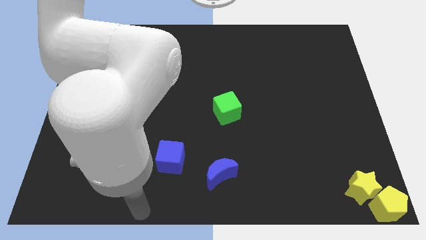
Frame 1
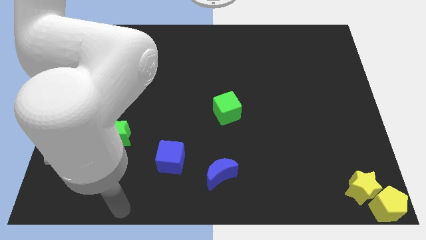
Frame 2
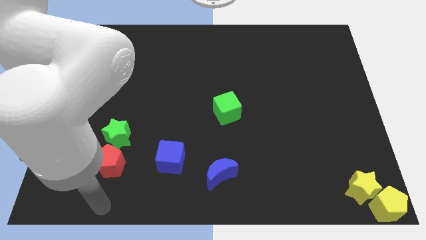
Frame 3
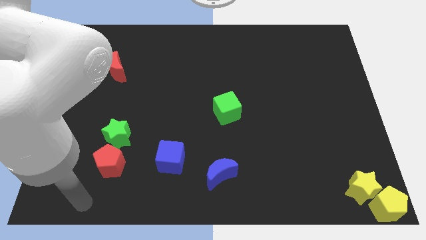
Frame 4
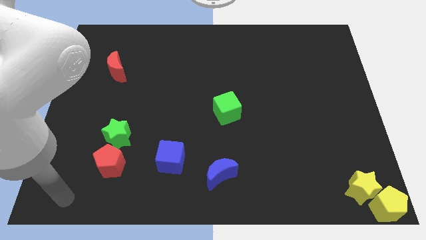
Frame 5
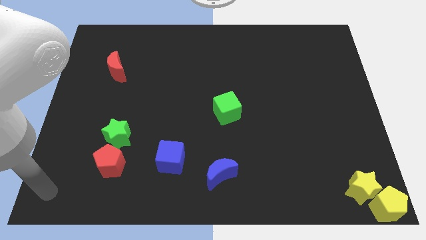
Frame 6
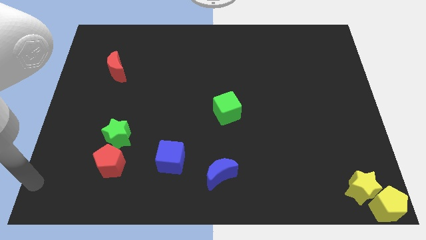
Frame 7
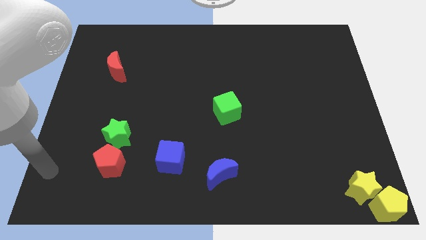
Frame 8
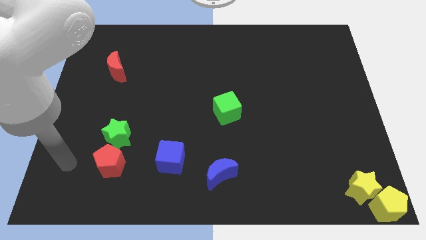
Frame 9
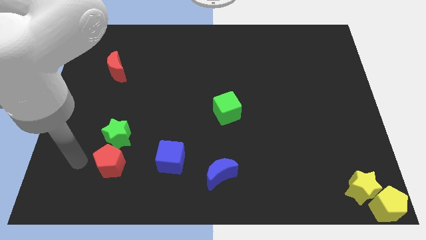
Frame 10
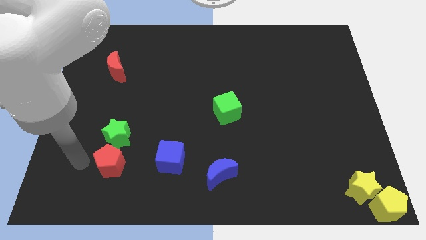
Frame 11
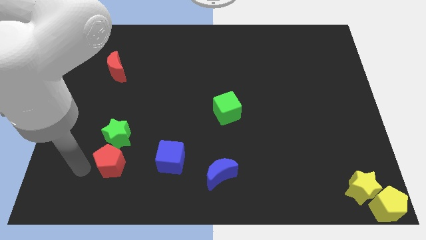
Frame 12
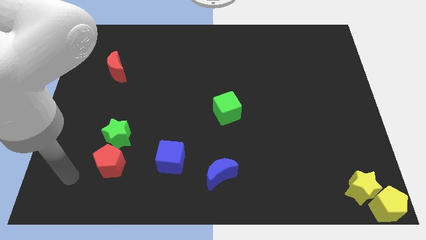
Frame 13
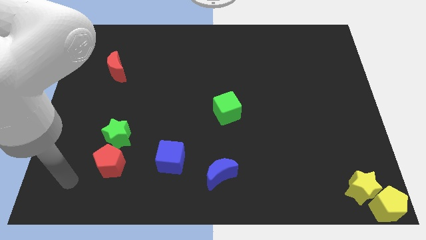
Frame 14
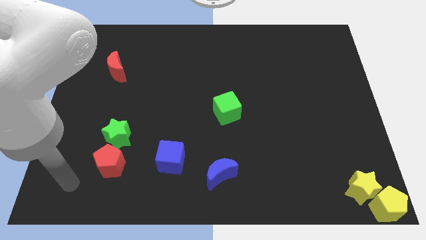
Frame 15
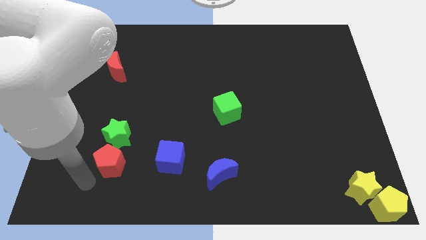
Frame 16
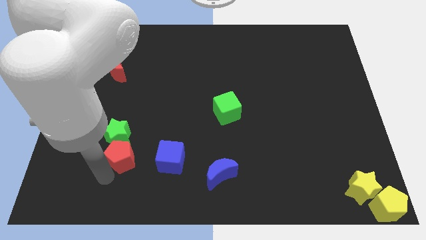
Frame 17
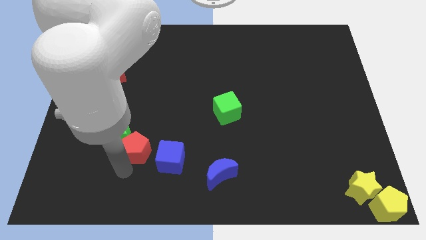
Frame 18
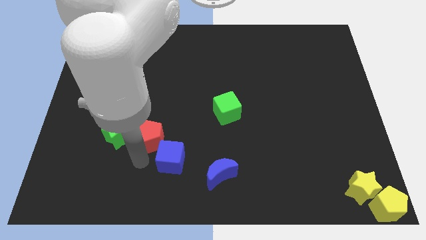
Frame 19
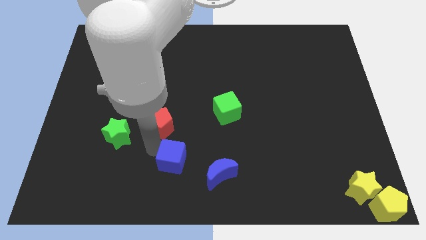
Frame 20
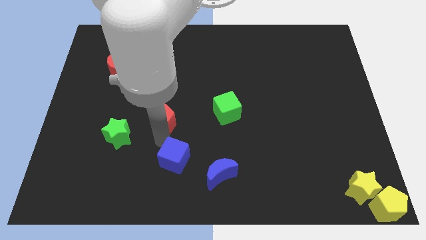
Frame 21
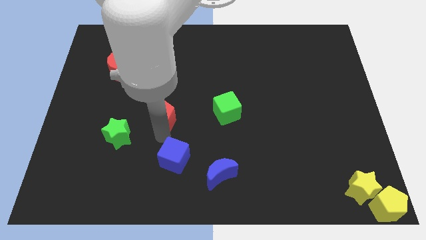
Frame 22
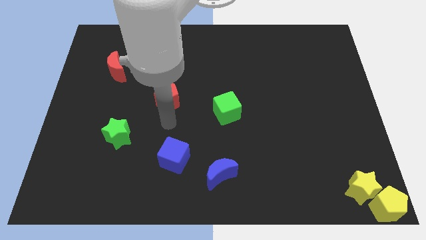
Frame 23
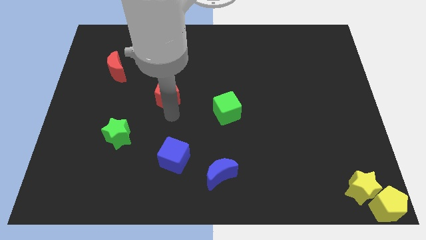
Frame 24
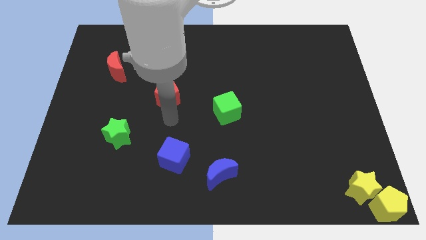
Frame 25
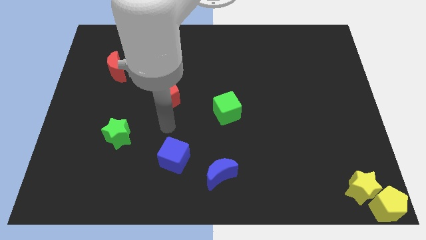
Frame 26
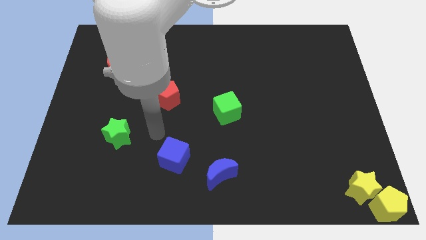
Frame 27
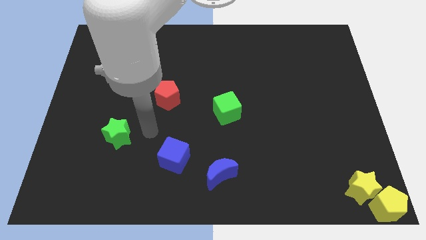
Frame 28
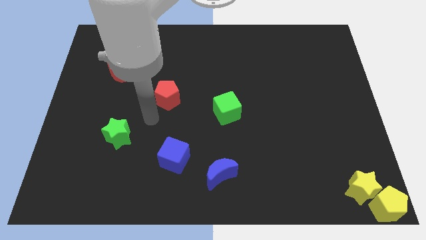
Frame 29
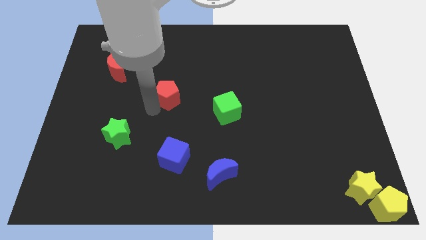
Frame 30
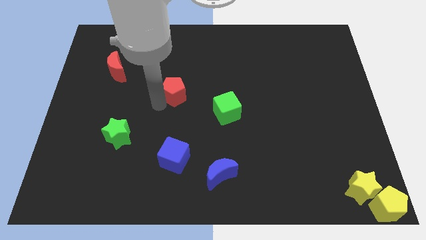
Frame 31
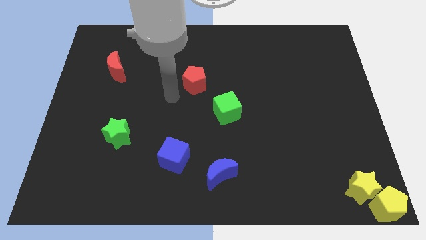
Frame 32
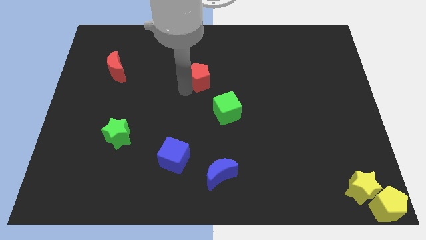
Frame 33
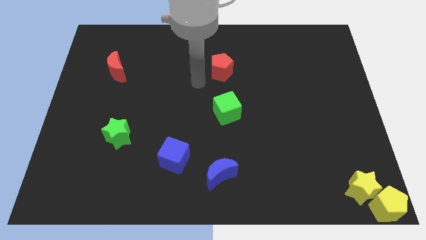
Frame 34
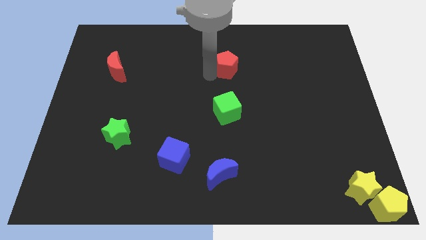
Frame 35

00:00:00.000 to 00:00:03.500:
move the red pentagon vertically to the green cube

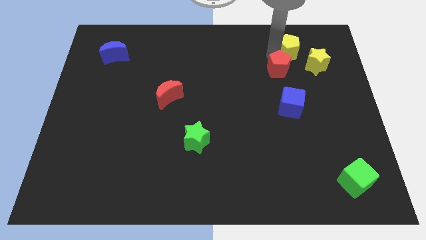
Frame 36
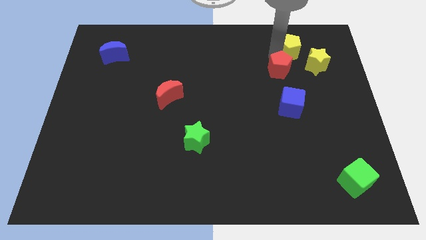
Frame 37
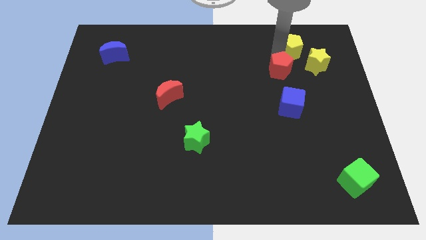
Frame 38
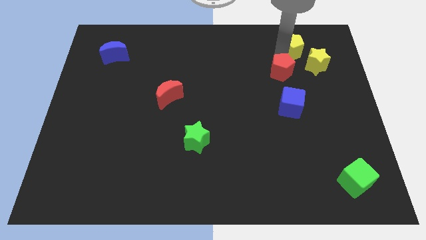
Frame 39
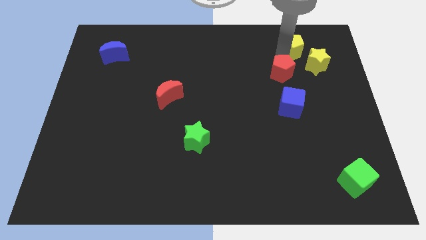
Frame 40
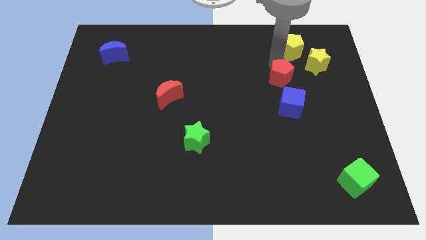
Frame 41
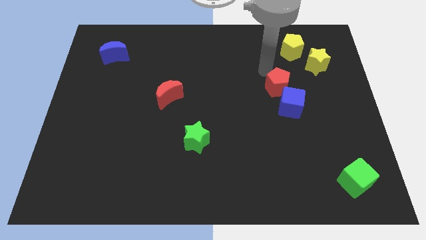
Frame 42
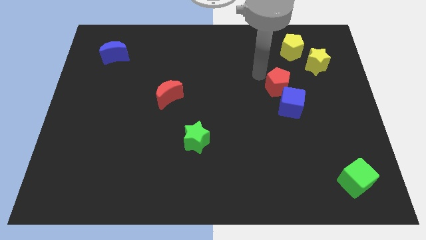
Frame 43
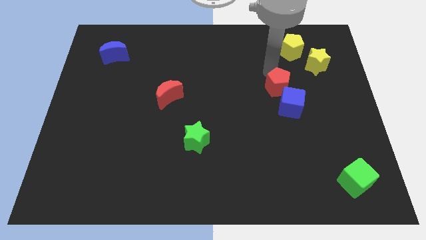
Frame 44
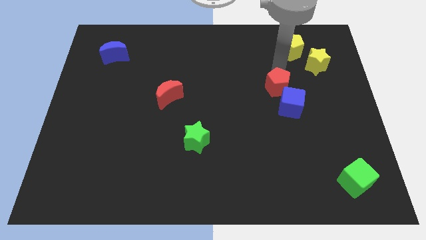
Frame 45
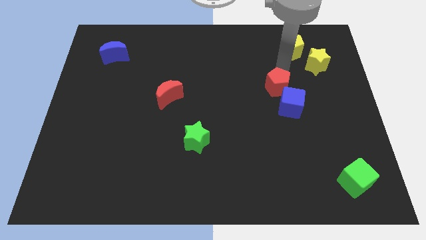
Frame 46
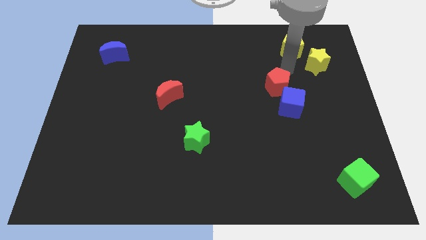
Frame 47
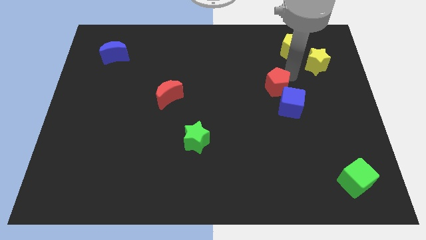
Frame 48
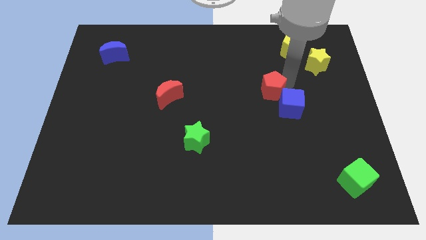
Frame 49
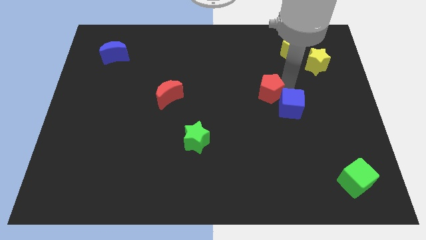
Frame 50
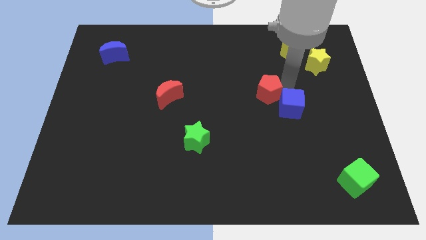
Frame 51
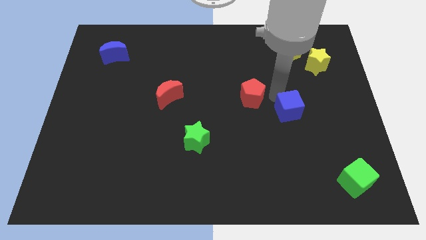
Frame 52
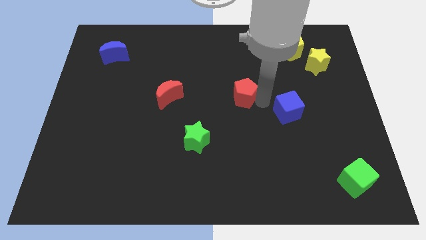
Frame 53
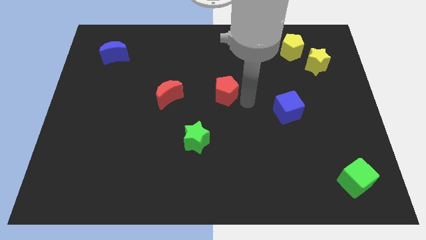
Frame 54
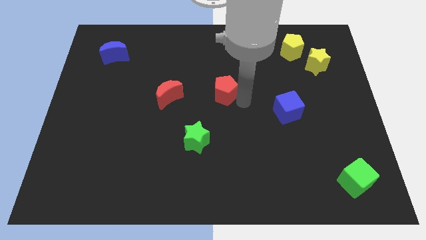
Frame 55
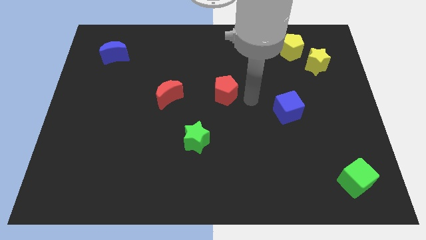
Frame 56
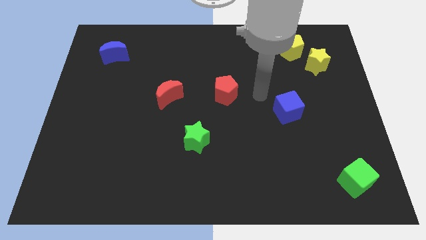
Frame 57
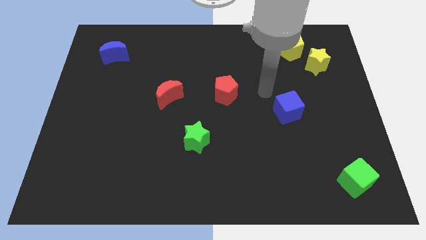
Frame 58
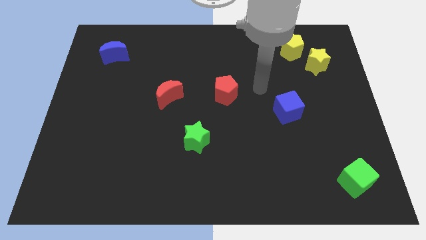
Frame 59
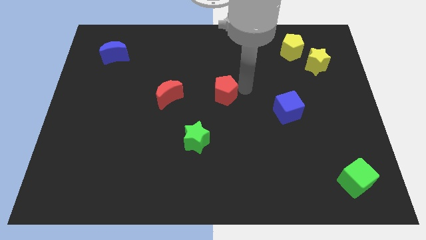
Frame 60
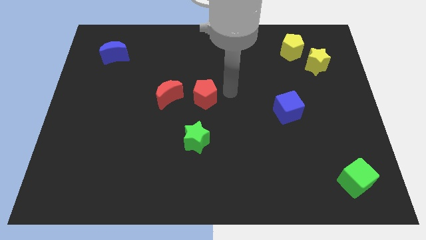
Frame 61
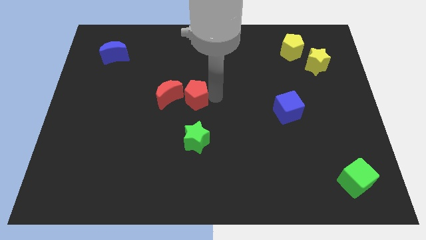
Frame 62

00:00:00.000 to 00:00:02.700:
place red pentagon at the center

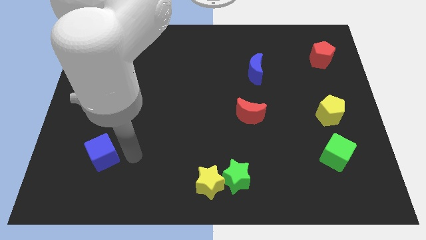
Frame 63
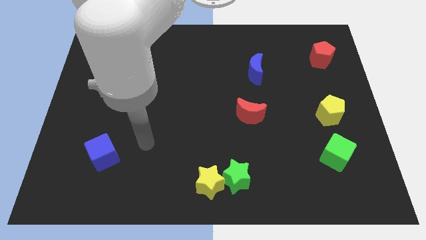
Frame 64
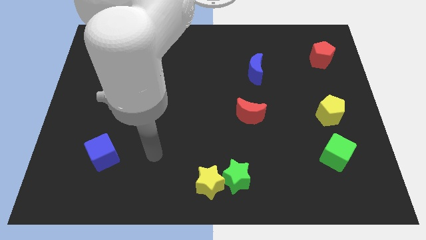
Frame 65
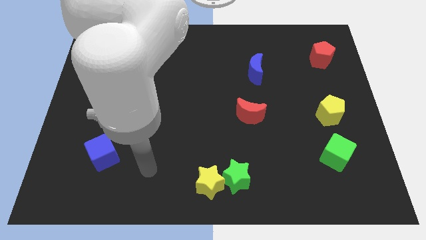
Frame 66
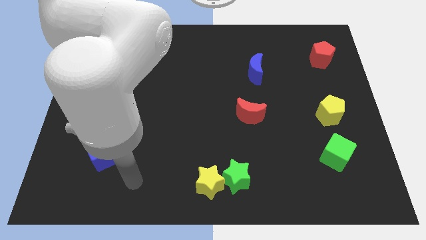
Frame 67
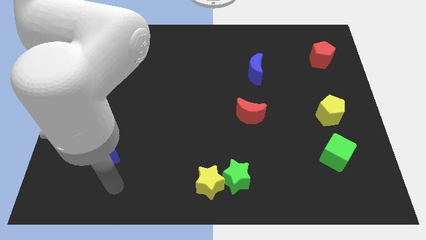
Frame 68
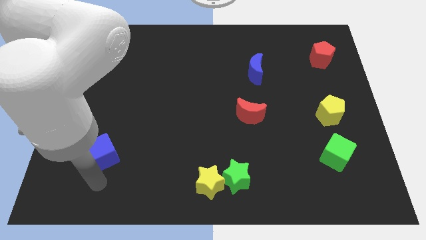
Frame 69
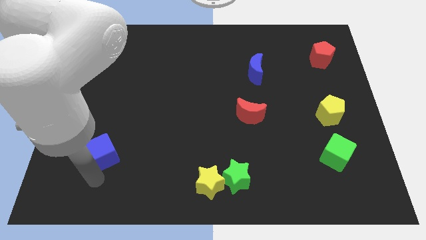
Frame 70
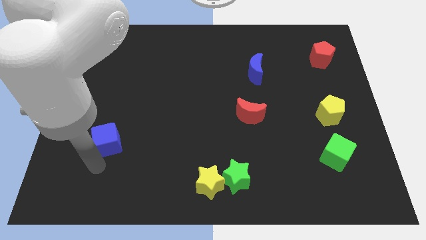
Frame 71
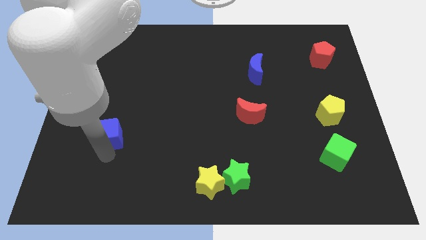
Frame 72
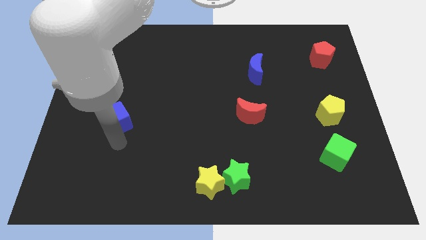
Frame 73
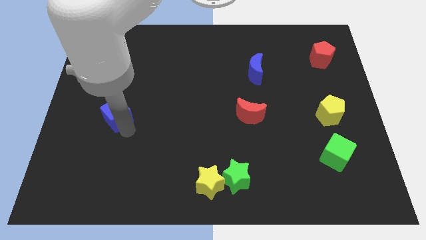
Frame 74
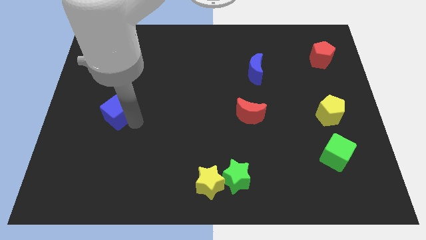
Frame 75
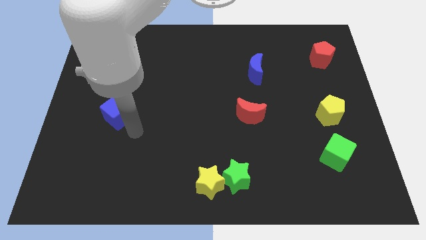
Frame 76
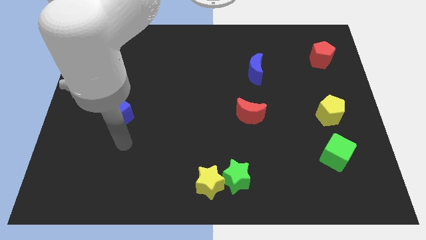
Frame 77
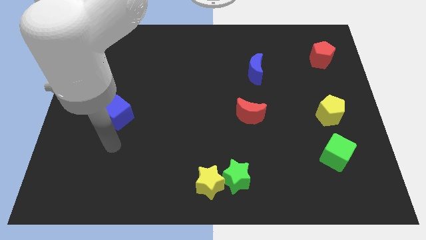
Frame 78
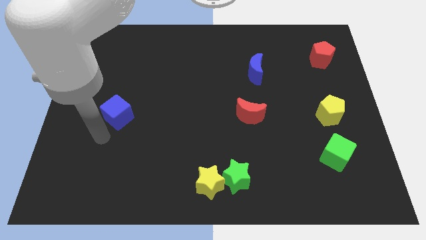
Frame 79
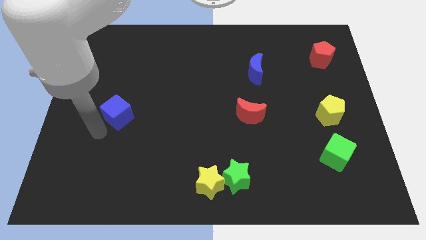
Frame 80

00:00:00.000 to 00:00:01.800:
move the blue cube at the left side of the red crescent

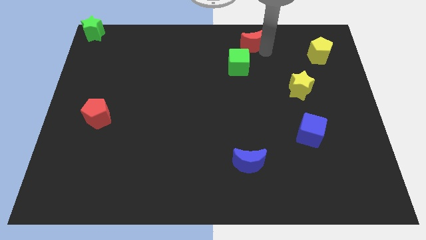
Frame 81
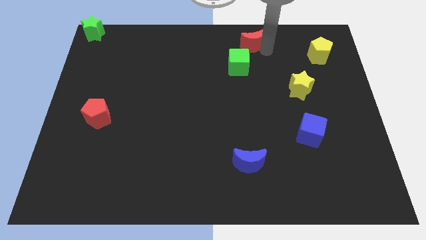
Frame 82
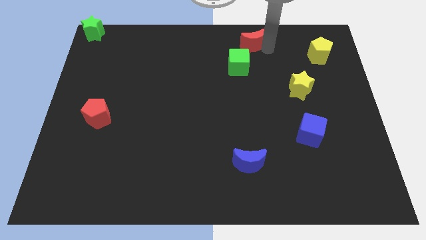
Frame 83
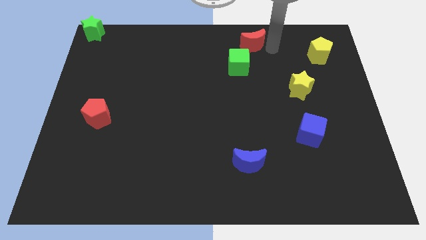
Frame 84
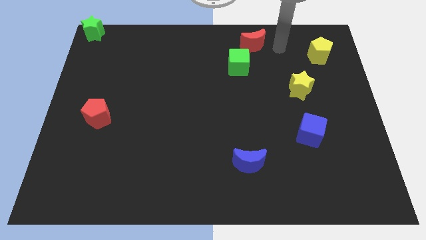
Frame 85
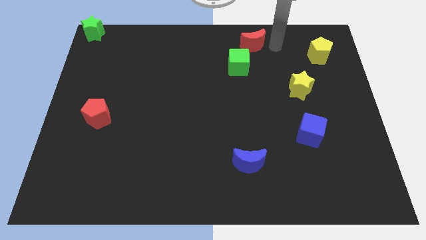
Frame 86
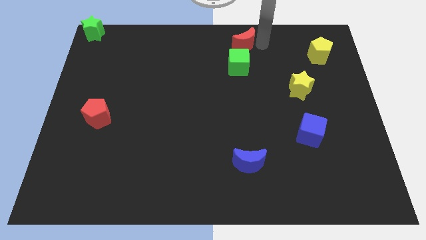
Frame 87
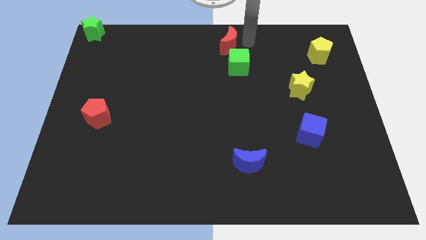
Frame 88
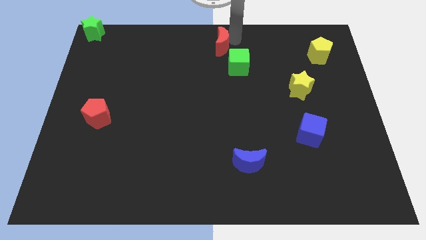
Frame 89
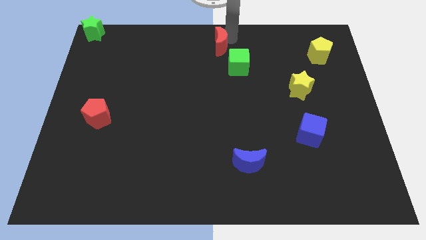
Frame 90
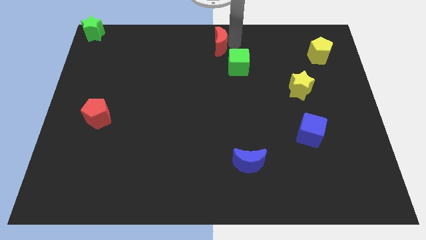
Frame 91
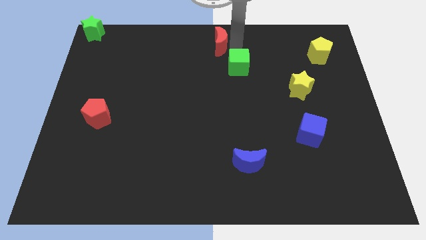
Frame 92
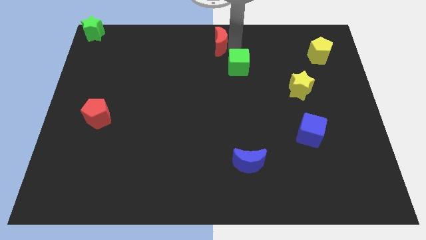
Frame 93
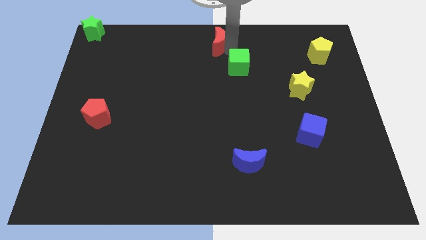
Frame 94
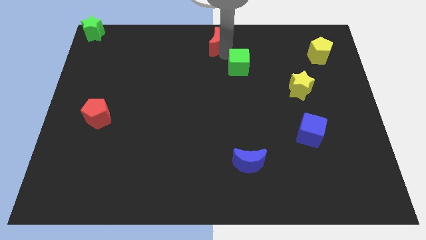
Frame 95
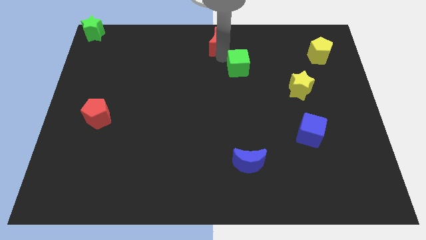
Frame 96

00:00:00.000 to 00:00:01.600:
push the red crescent towards the left side of the board
